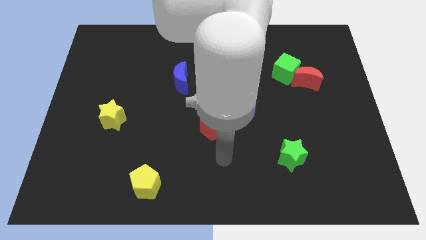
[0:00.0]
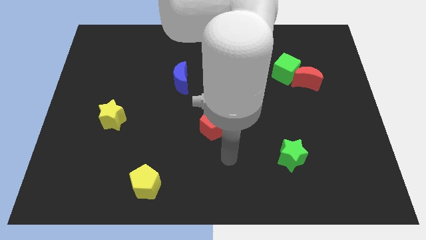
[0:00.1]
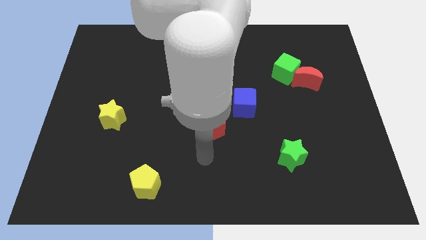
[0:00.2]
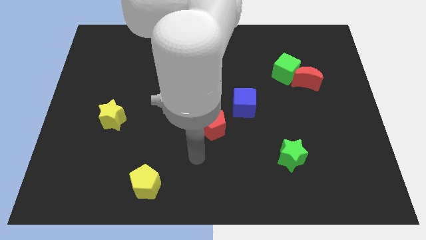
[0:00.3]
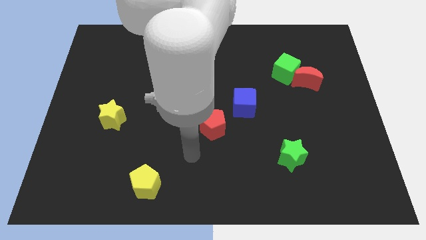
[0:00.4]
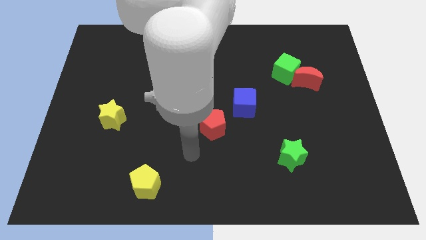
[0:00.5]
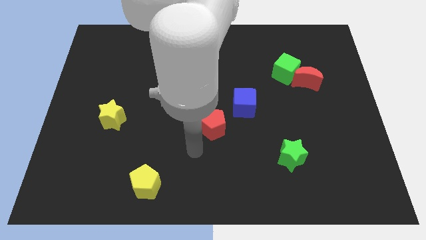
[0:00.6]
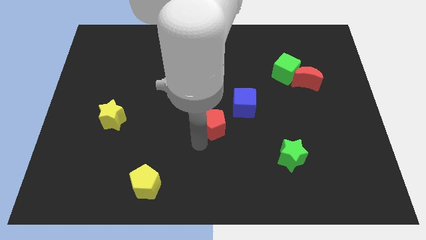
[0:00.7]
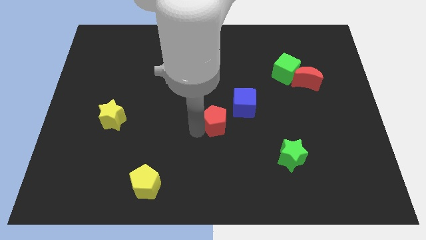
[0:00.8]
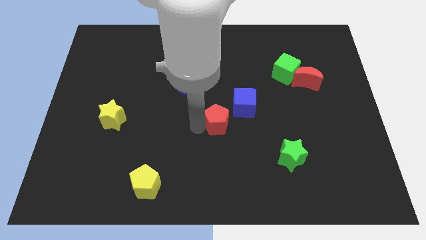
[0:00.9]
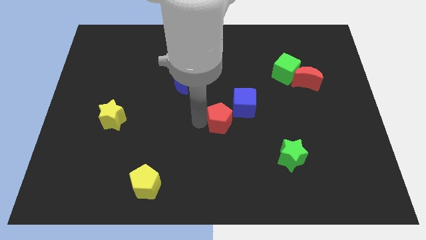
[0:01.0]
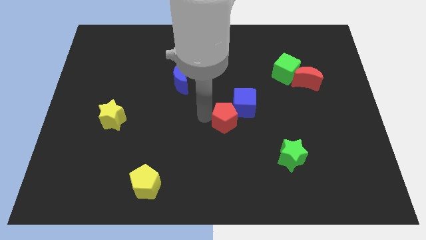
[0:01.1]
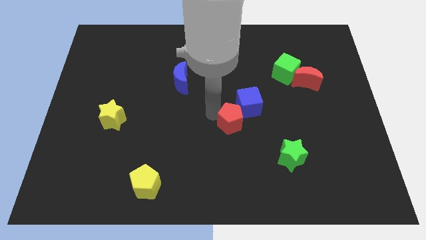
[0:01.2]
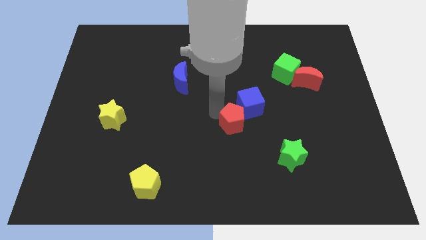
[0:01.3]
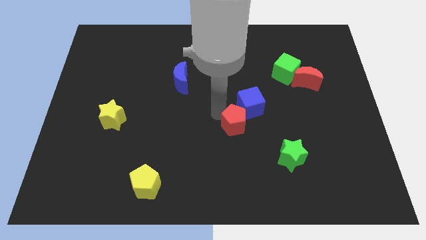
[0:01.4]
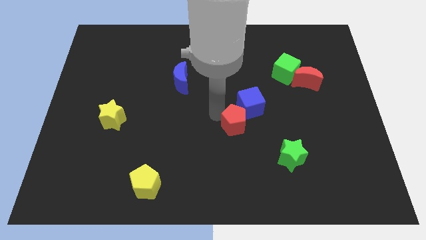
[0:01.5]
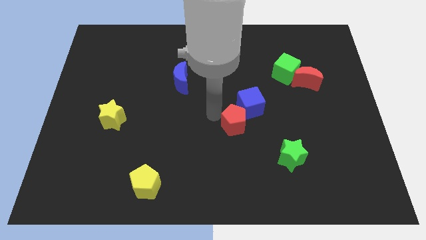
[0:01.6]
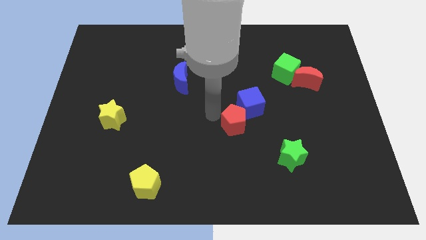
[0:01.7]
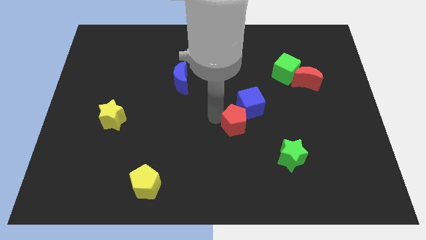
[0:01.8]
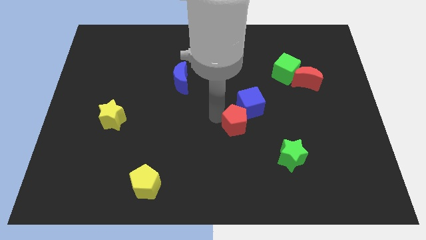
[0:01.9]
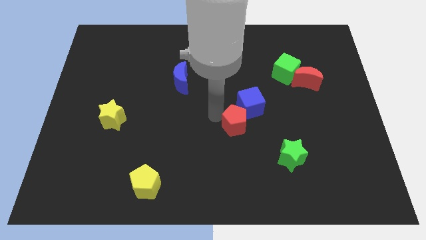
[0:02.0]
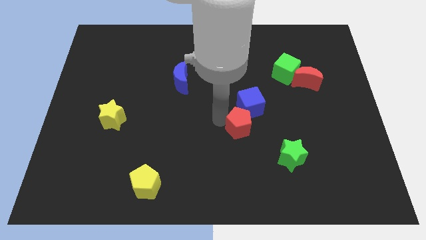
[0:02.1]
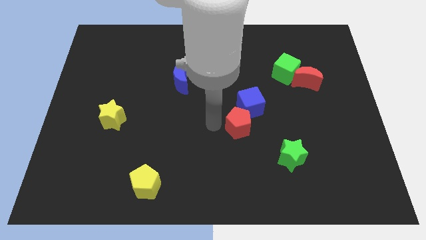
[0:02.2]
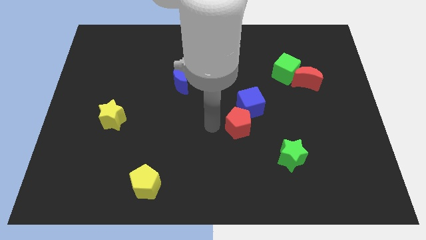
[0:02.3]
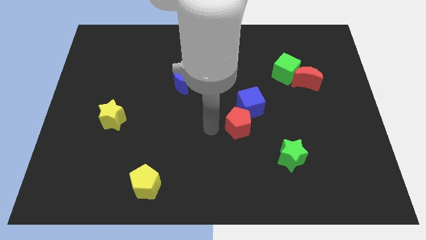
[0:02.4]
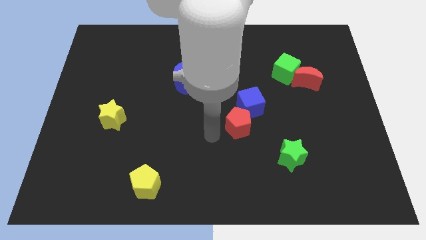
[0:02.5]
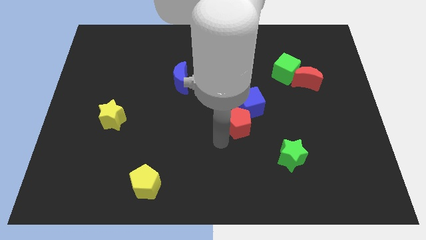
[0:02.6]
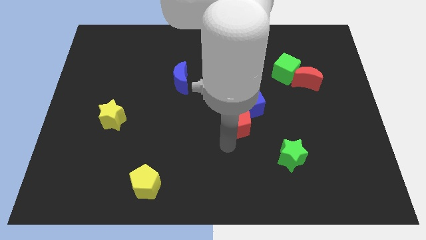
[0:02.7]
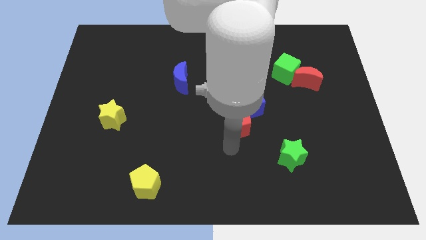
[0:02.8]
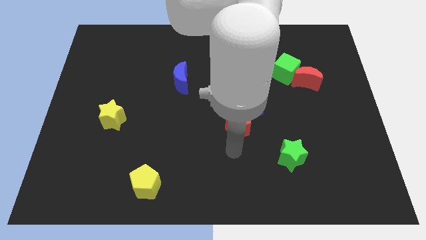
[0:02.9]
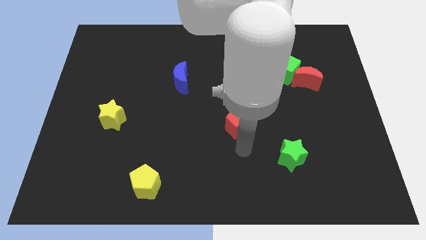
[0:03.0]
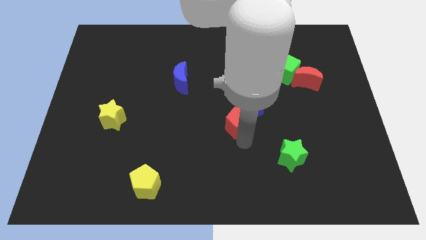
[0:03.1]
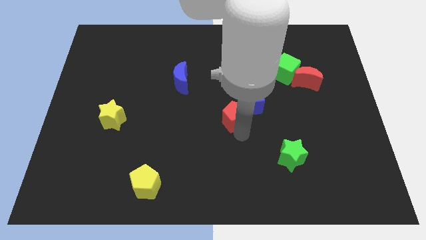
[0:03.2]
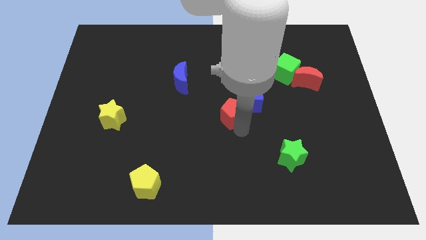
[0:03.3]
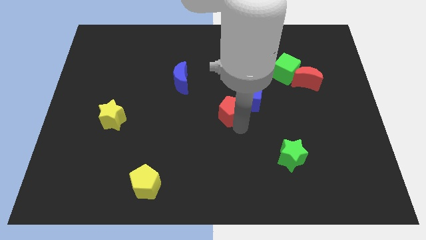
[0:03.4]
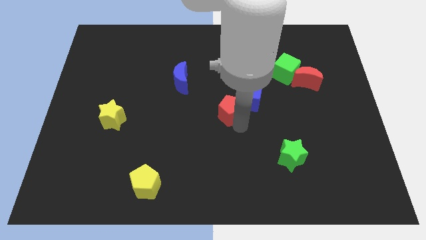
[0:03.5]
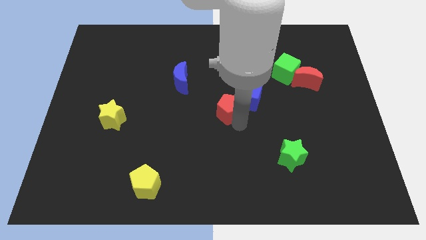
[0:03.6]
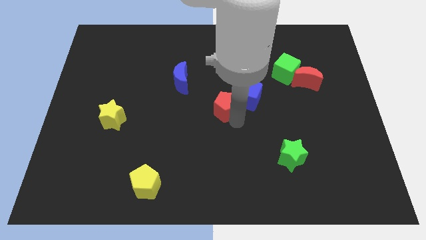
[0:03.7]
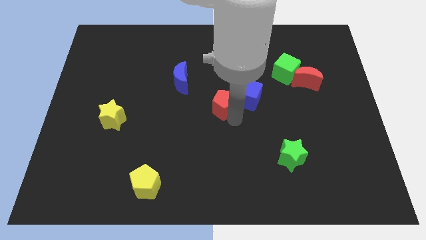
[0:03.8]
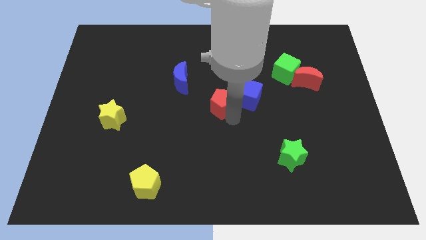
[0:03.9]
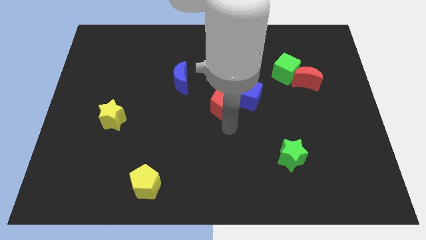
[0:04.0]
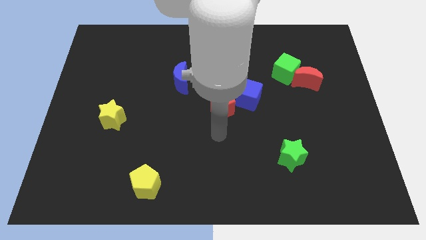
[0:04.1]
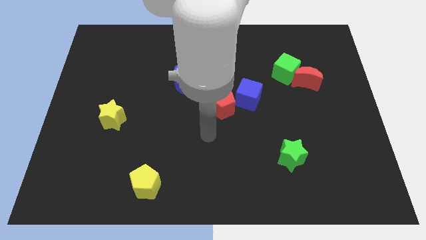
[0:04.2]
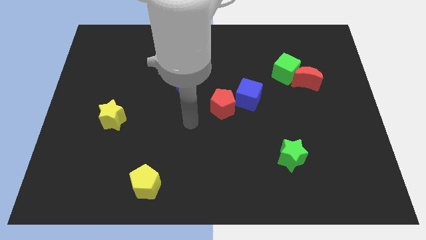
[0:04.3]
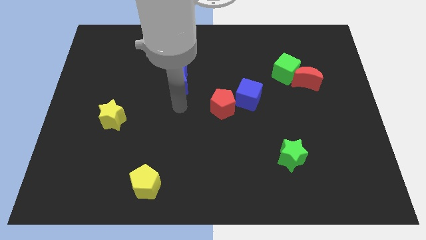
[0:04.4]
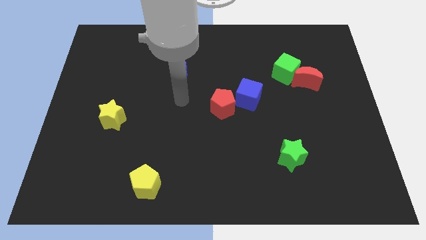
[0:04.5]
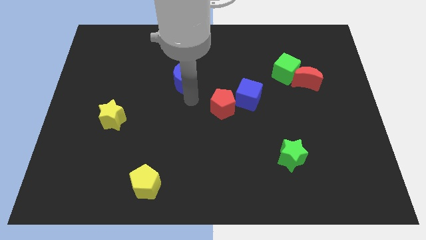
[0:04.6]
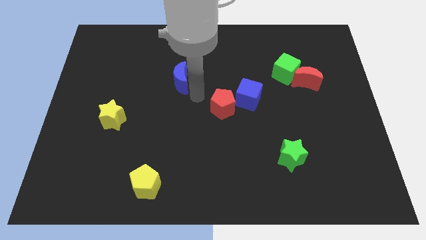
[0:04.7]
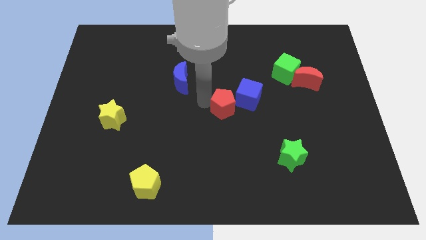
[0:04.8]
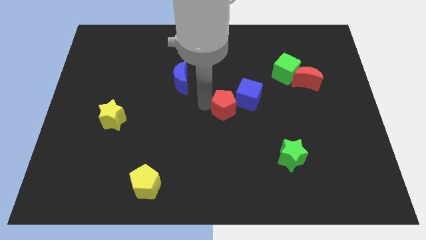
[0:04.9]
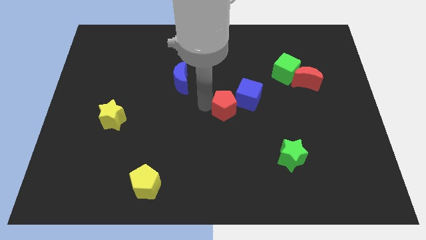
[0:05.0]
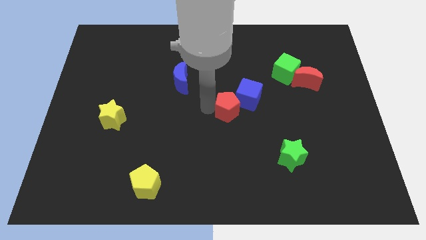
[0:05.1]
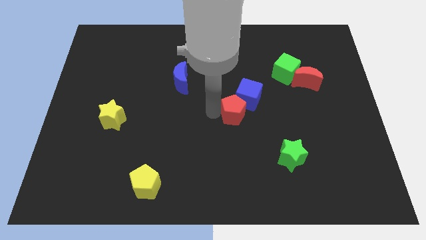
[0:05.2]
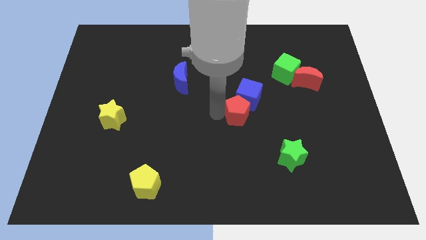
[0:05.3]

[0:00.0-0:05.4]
slide the red pentagon towards the blue cube

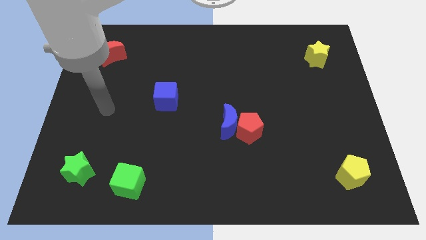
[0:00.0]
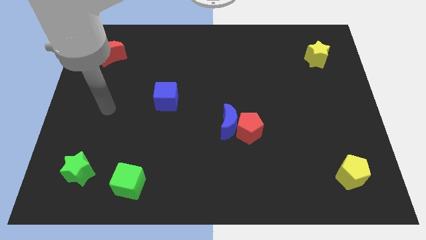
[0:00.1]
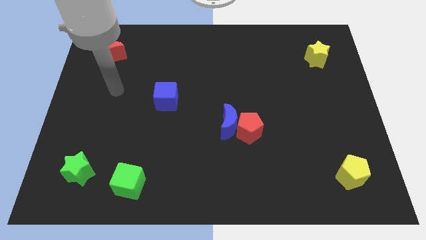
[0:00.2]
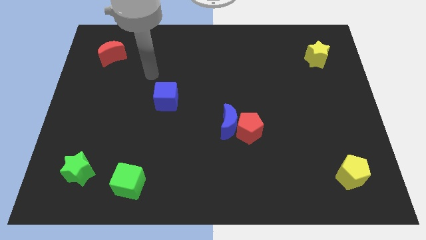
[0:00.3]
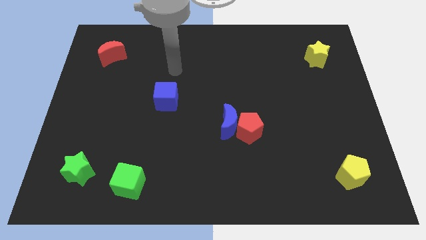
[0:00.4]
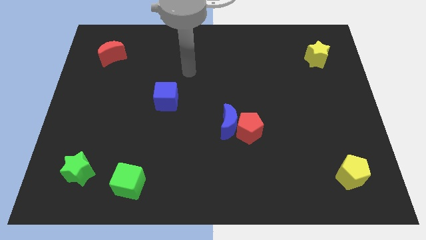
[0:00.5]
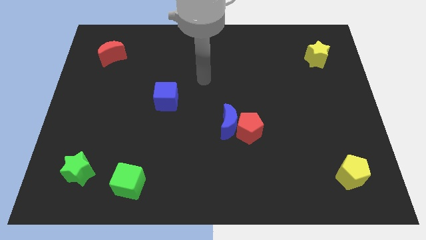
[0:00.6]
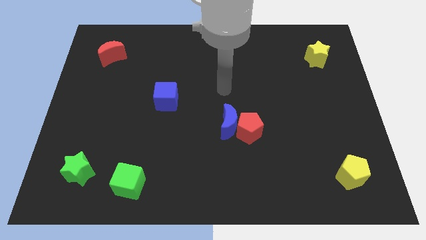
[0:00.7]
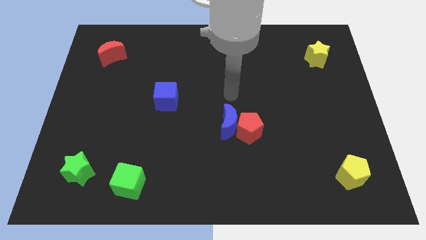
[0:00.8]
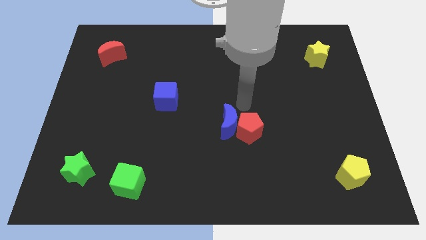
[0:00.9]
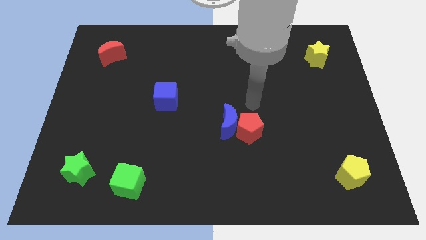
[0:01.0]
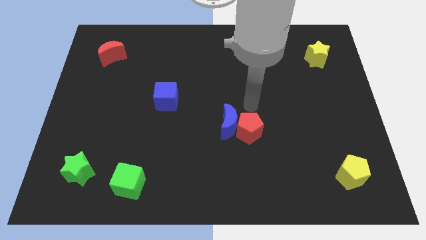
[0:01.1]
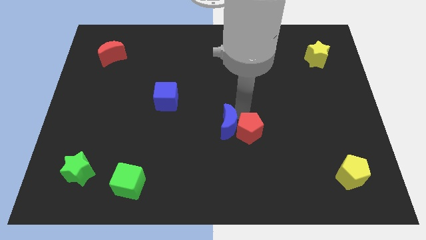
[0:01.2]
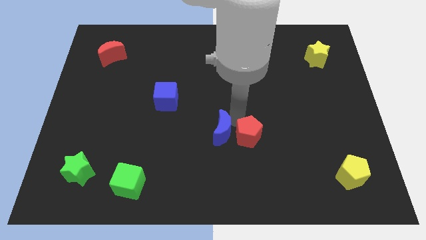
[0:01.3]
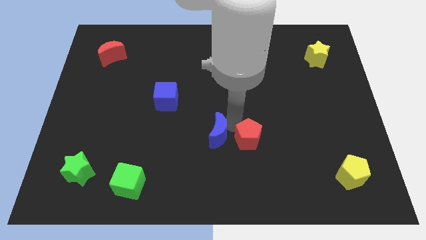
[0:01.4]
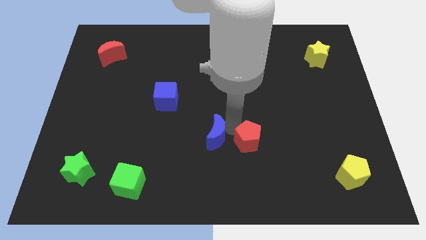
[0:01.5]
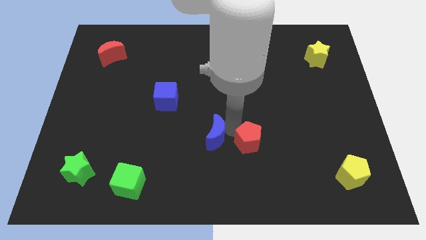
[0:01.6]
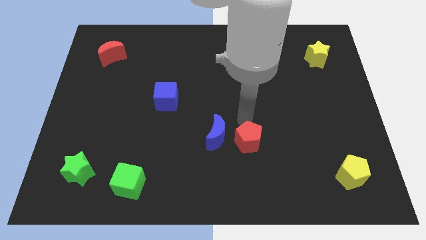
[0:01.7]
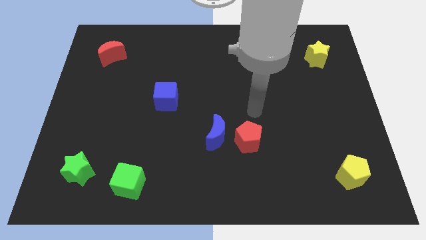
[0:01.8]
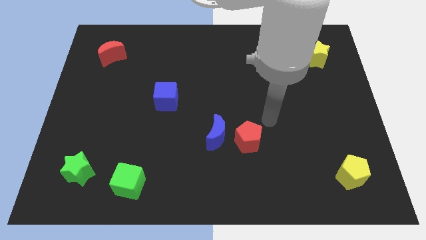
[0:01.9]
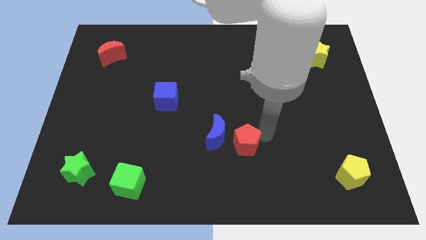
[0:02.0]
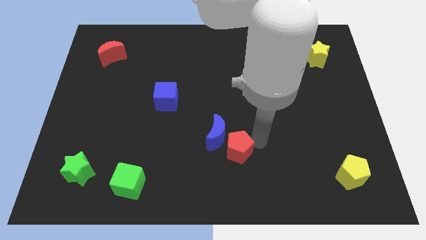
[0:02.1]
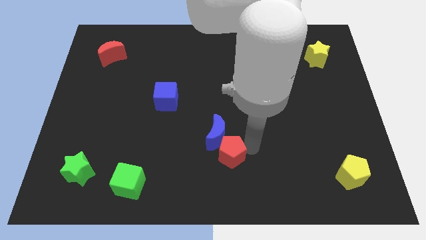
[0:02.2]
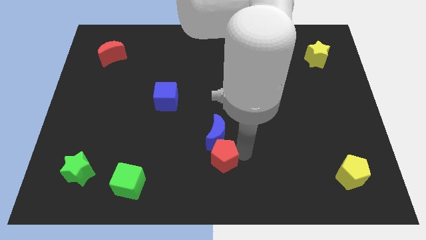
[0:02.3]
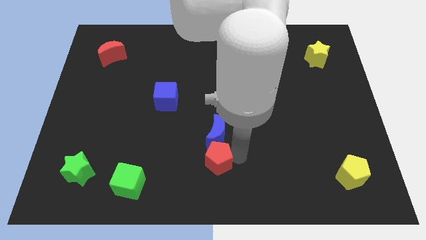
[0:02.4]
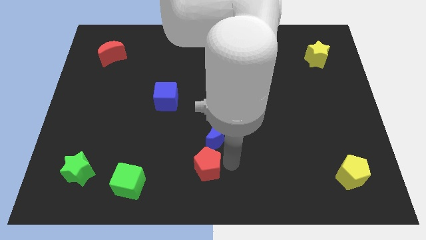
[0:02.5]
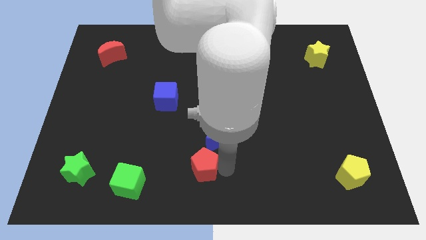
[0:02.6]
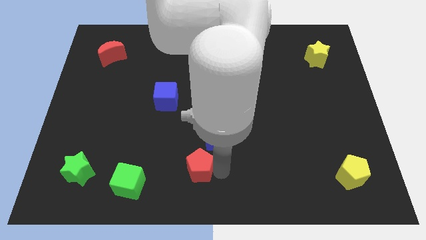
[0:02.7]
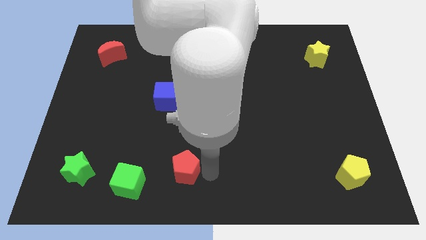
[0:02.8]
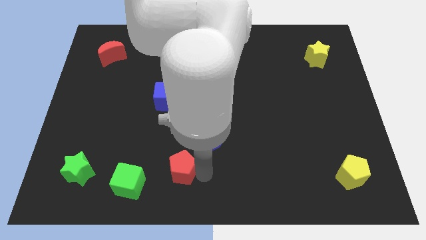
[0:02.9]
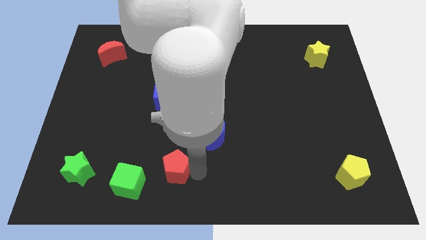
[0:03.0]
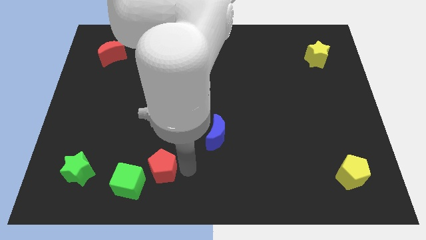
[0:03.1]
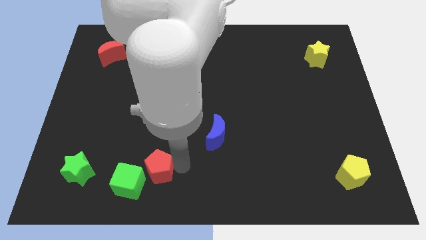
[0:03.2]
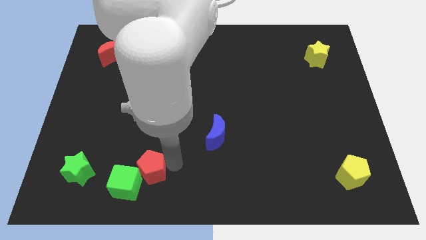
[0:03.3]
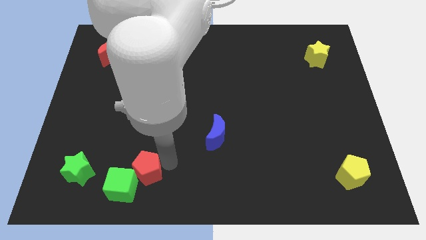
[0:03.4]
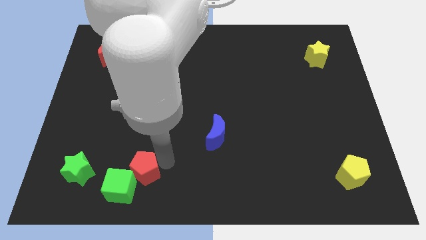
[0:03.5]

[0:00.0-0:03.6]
move the red pentagon next to the green cube
